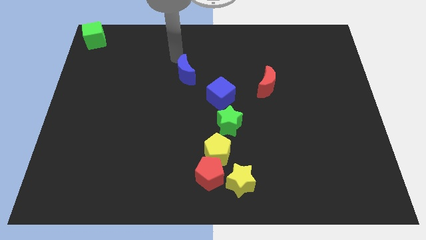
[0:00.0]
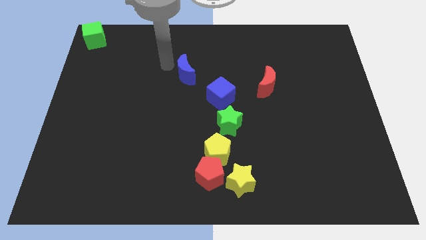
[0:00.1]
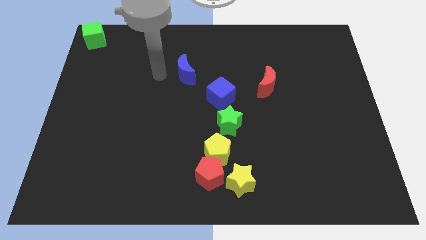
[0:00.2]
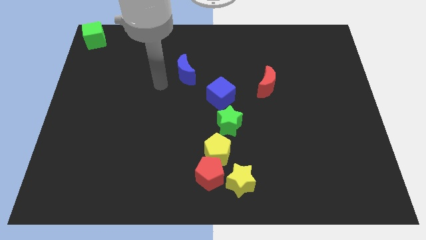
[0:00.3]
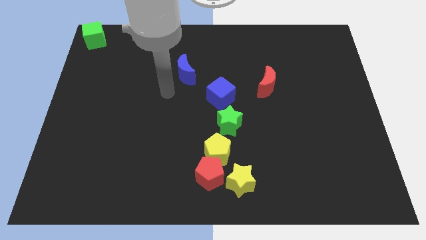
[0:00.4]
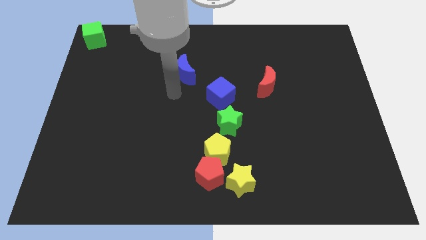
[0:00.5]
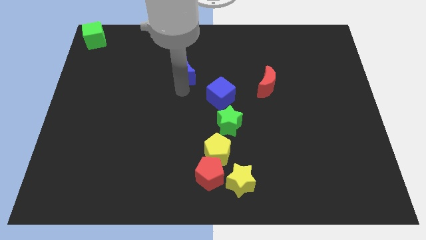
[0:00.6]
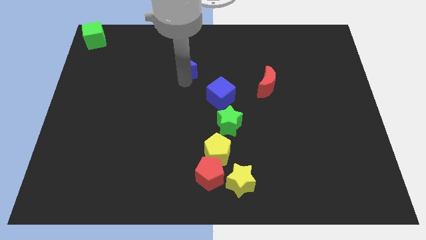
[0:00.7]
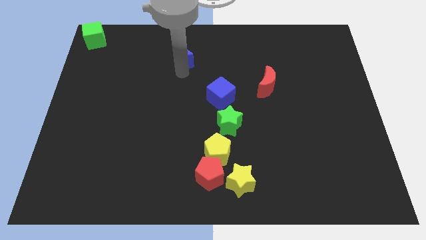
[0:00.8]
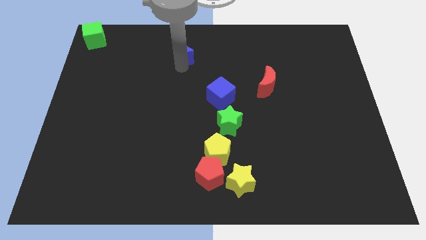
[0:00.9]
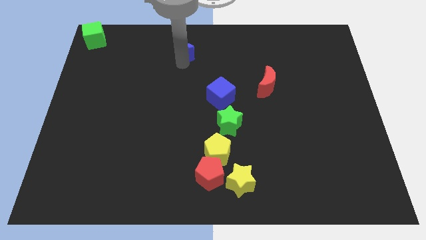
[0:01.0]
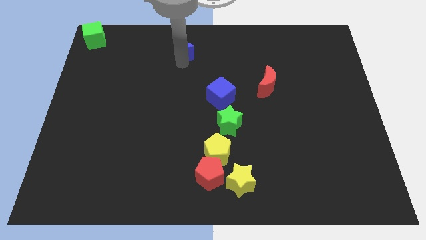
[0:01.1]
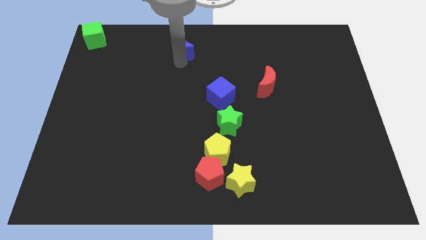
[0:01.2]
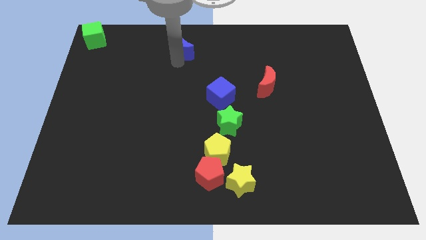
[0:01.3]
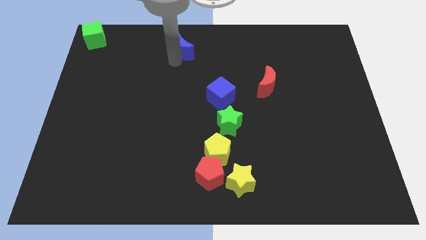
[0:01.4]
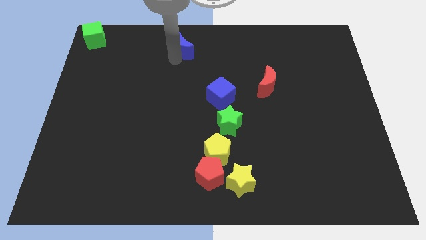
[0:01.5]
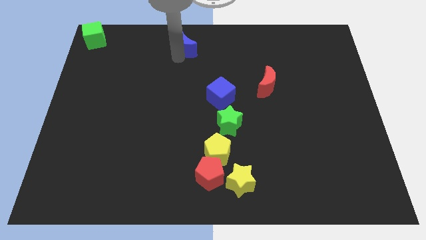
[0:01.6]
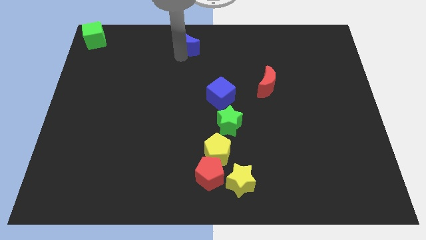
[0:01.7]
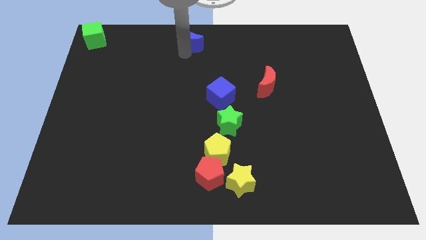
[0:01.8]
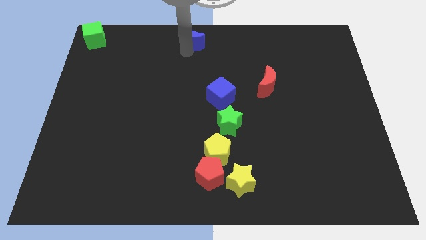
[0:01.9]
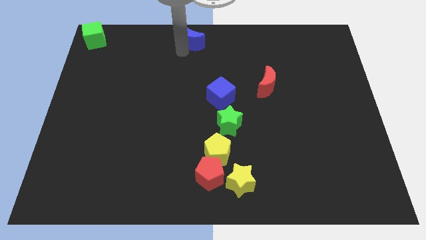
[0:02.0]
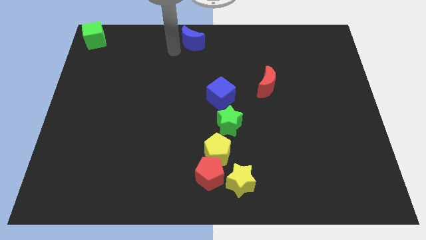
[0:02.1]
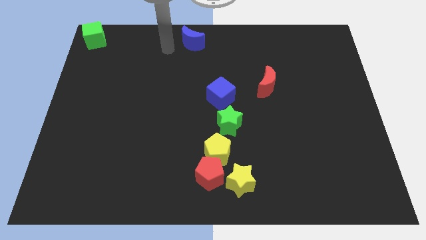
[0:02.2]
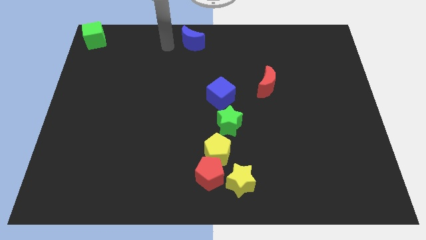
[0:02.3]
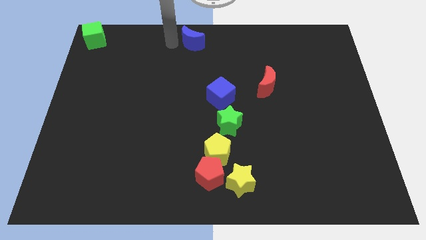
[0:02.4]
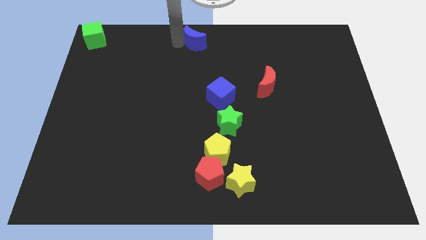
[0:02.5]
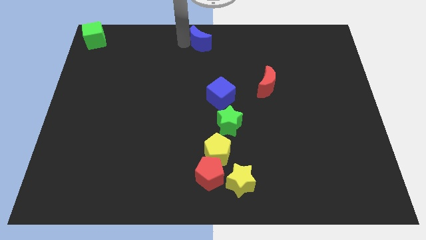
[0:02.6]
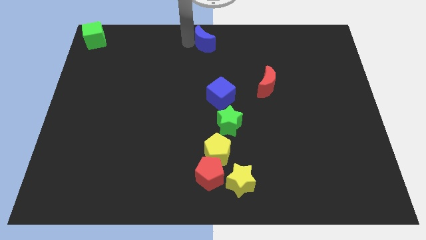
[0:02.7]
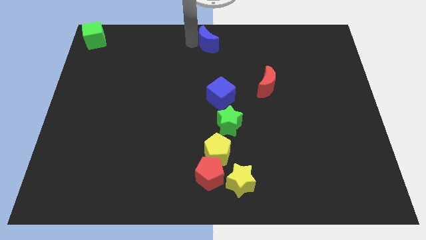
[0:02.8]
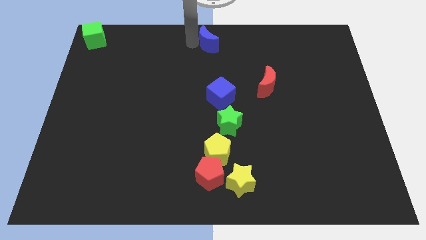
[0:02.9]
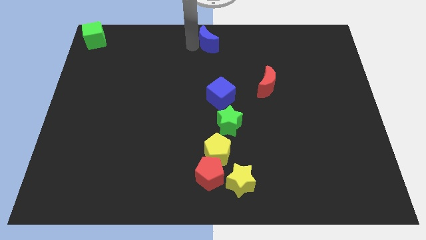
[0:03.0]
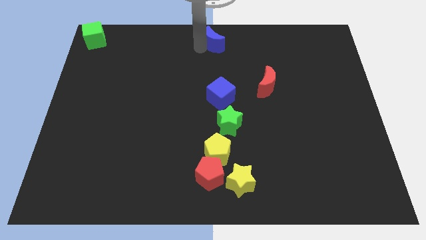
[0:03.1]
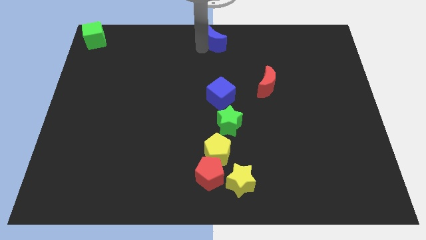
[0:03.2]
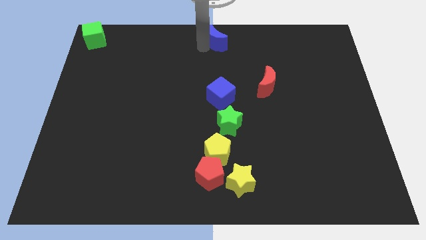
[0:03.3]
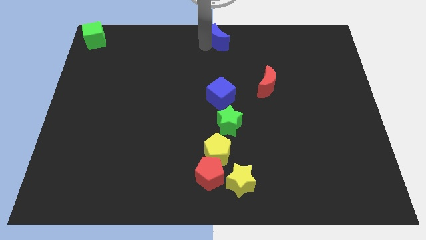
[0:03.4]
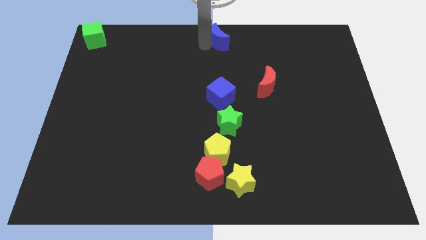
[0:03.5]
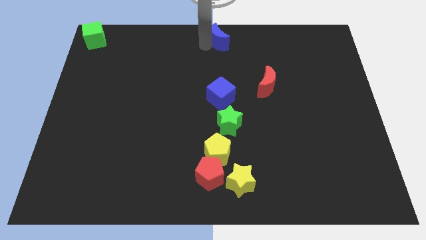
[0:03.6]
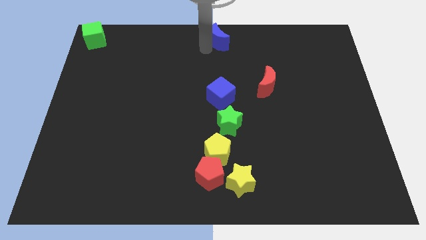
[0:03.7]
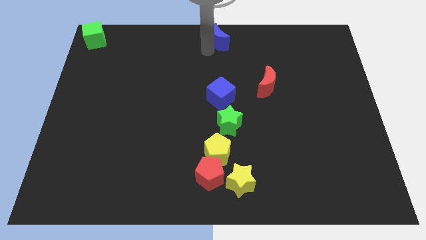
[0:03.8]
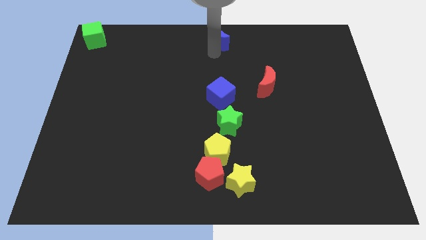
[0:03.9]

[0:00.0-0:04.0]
palce the blue crescent above the blue cube at the top

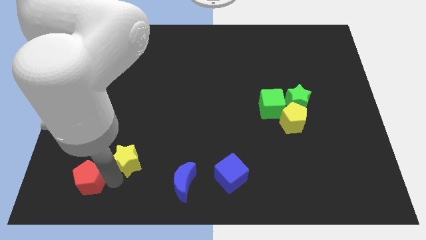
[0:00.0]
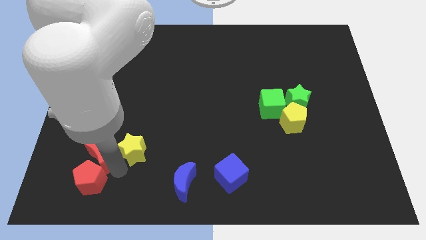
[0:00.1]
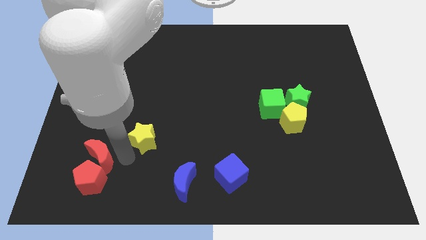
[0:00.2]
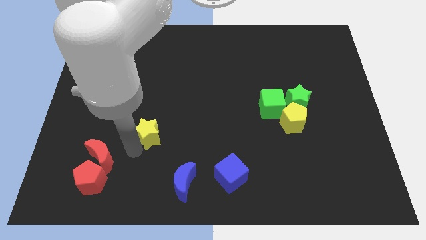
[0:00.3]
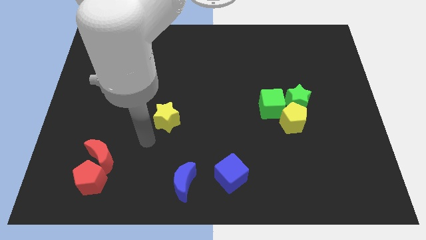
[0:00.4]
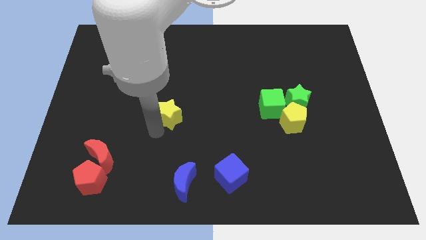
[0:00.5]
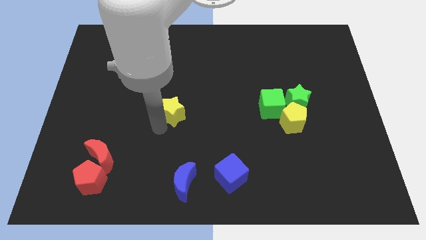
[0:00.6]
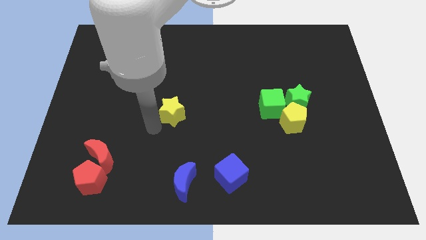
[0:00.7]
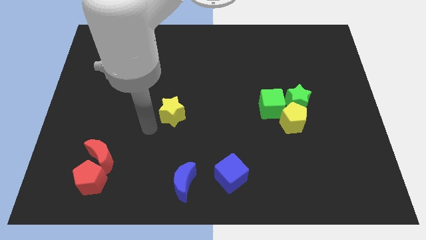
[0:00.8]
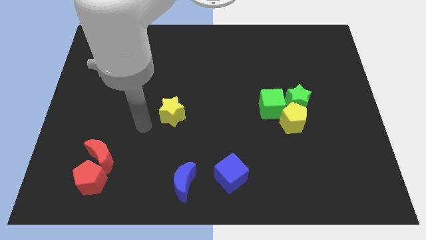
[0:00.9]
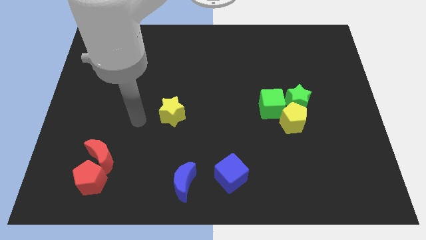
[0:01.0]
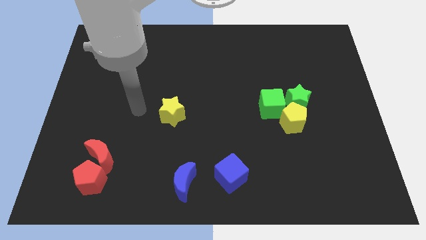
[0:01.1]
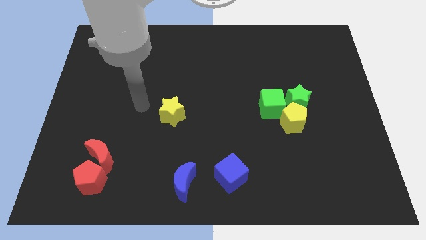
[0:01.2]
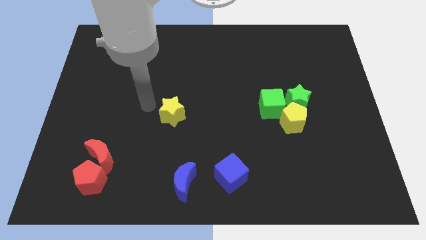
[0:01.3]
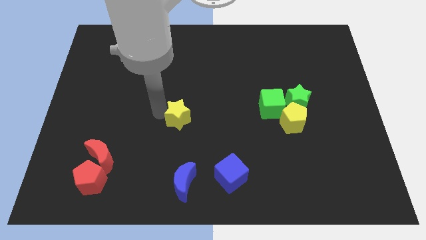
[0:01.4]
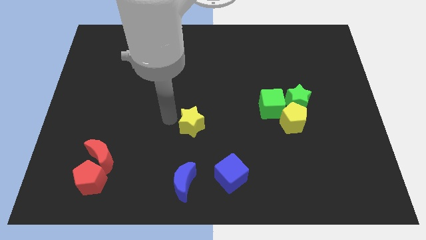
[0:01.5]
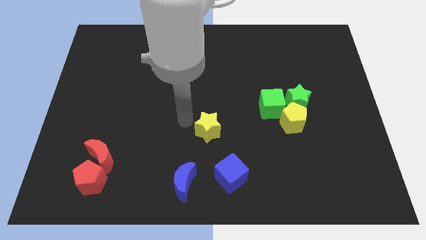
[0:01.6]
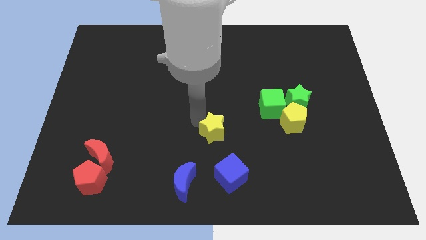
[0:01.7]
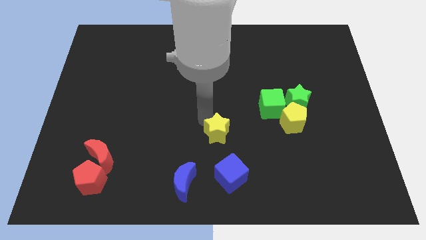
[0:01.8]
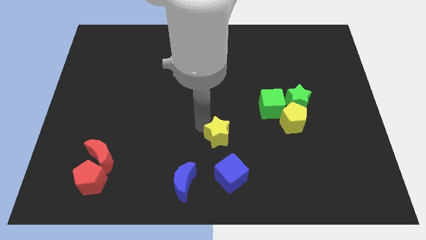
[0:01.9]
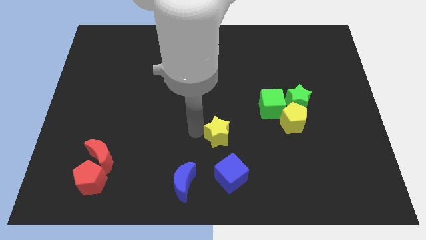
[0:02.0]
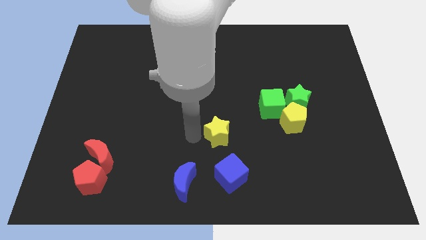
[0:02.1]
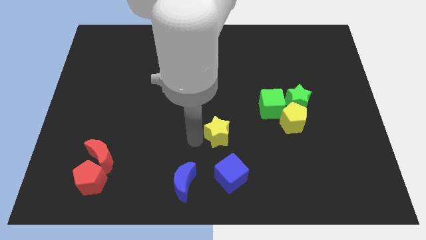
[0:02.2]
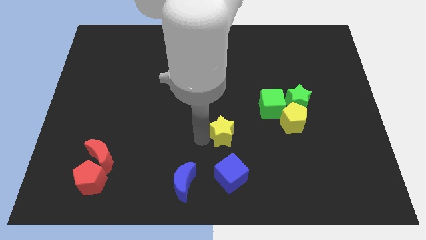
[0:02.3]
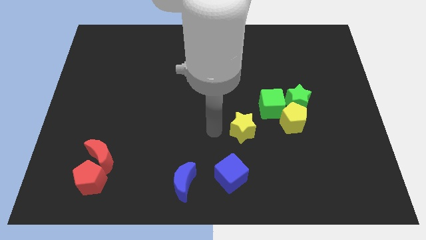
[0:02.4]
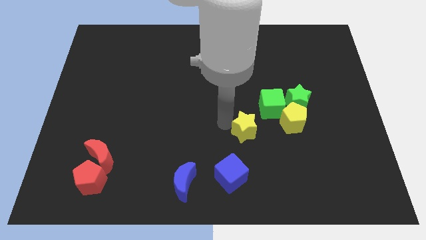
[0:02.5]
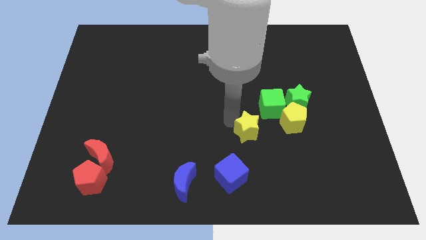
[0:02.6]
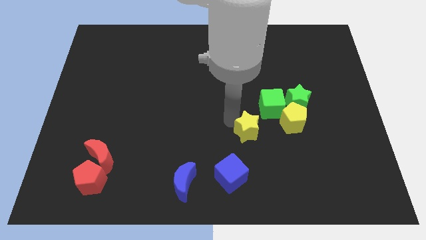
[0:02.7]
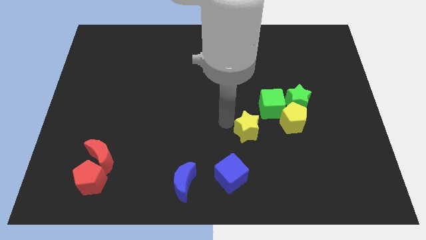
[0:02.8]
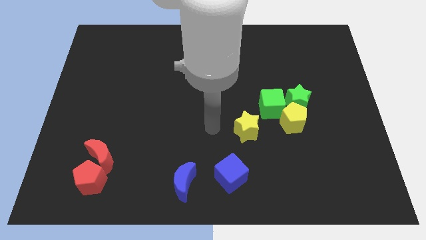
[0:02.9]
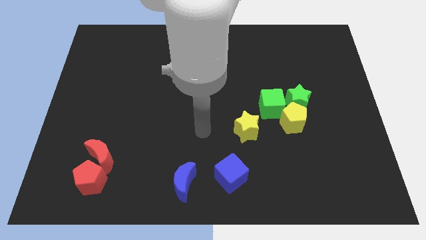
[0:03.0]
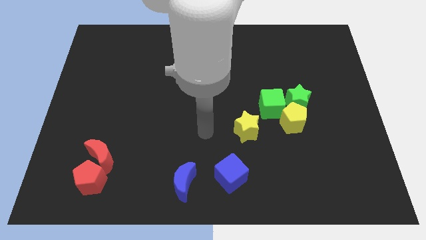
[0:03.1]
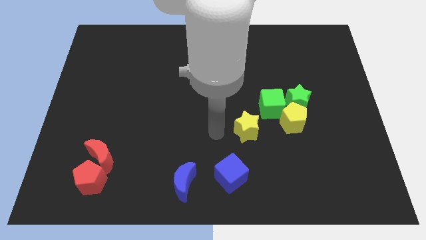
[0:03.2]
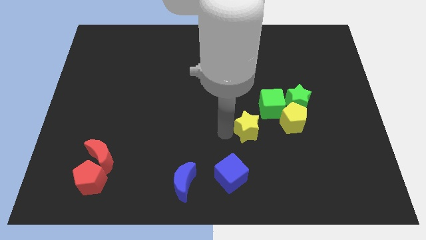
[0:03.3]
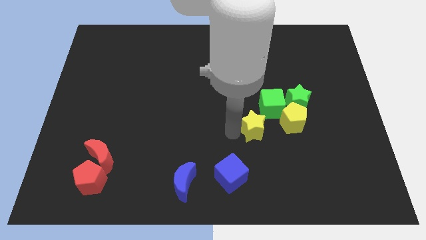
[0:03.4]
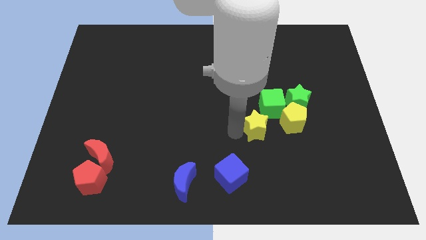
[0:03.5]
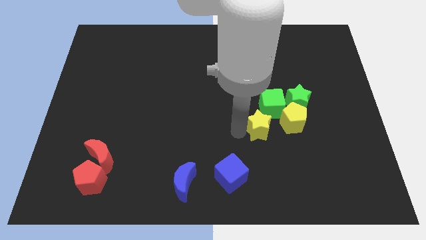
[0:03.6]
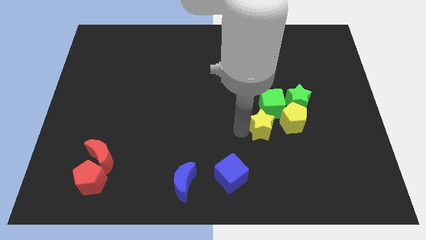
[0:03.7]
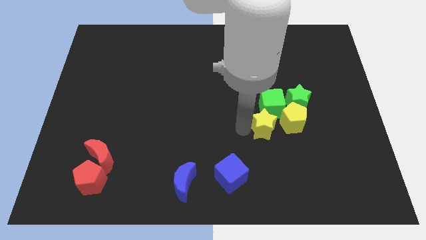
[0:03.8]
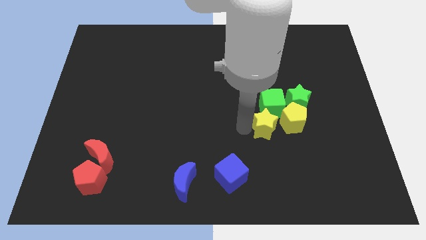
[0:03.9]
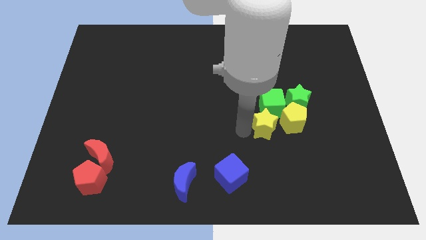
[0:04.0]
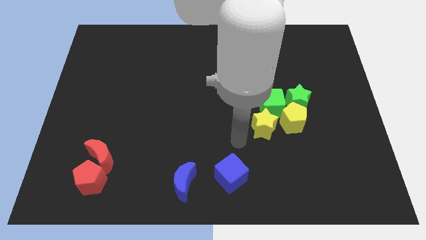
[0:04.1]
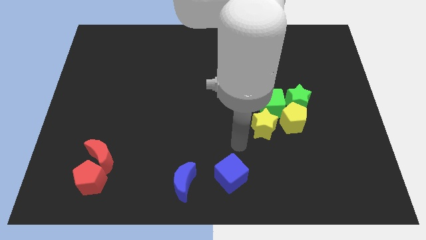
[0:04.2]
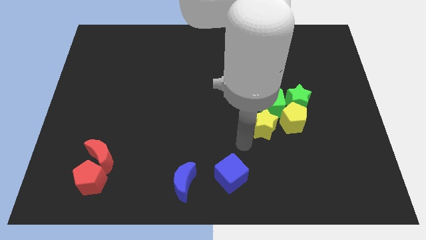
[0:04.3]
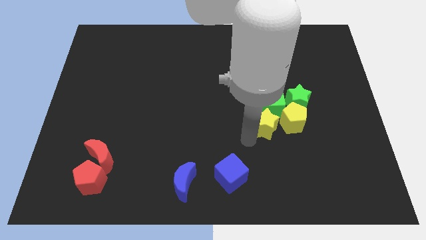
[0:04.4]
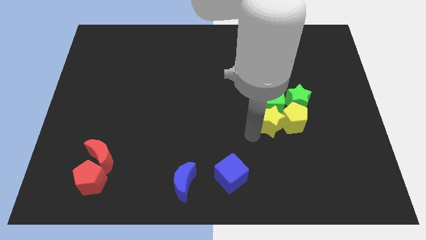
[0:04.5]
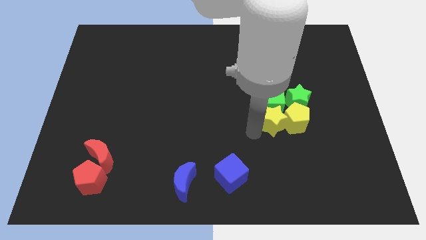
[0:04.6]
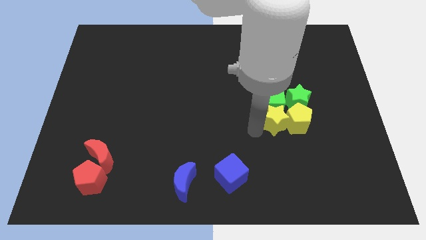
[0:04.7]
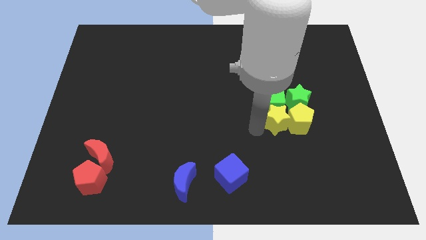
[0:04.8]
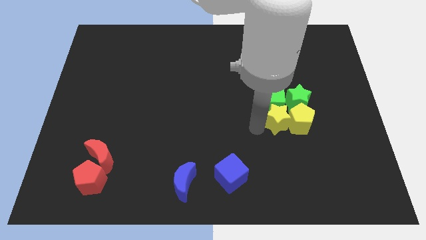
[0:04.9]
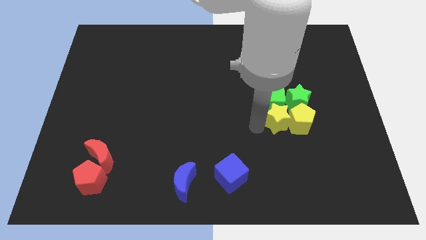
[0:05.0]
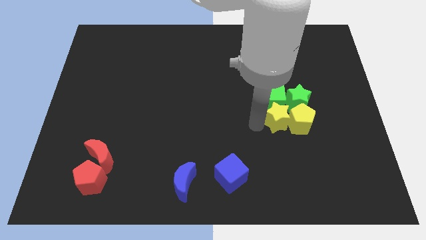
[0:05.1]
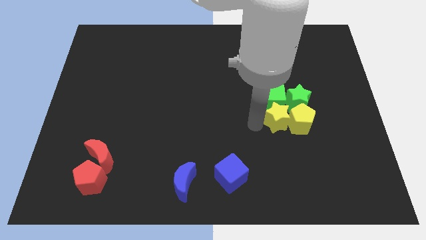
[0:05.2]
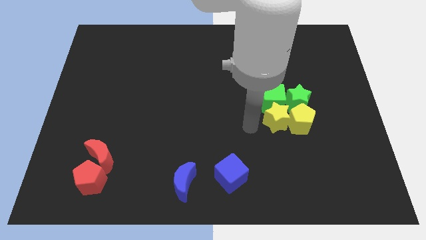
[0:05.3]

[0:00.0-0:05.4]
move the yellow star to the bottom of the green cube
